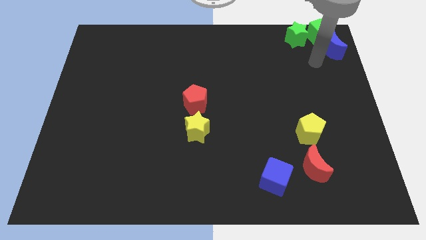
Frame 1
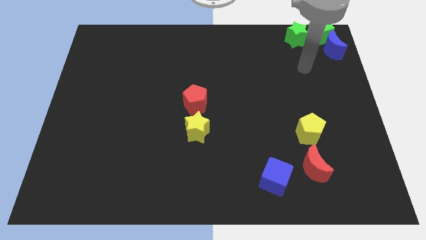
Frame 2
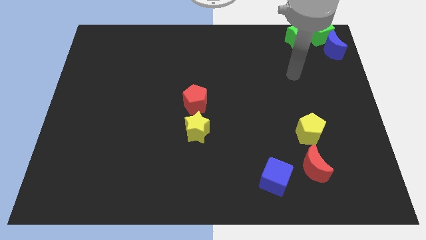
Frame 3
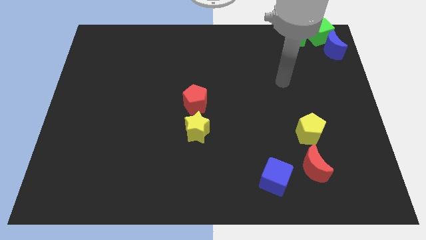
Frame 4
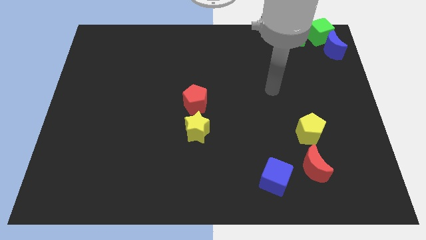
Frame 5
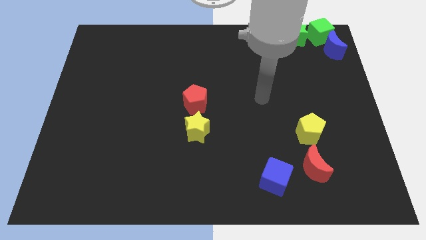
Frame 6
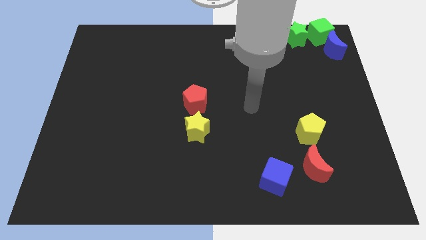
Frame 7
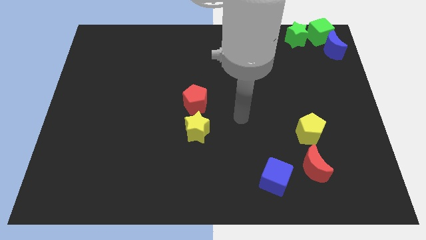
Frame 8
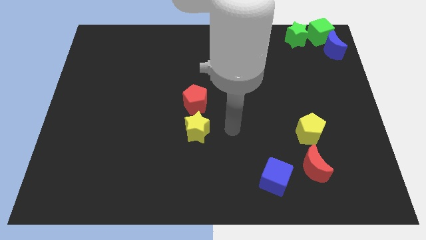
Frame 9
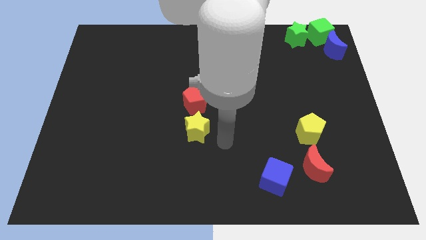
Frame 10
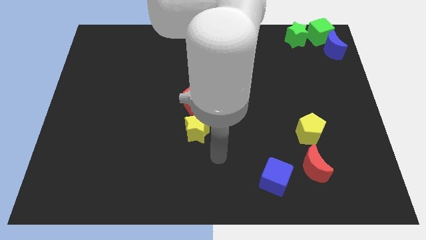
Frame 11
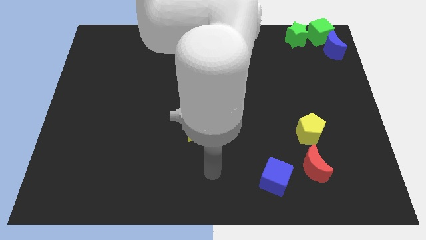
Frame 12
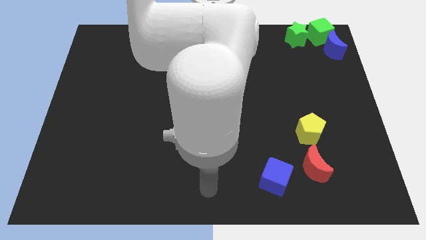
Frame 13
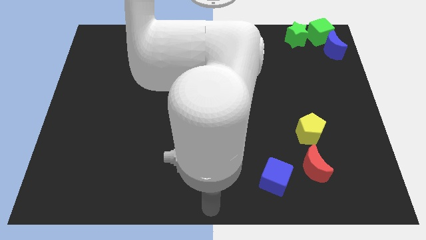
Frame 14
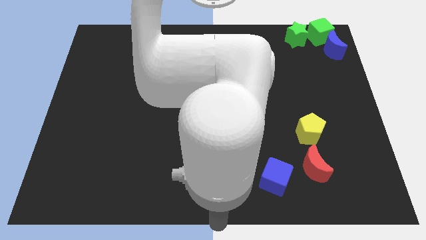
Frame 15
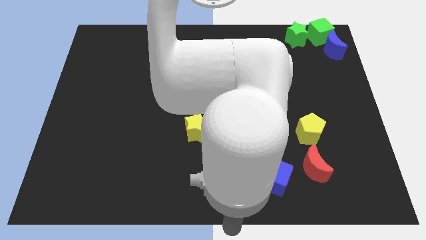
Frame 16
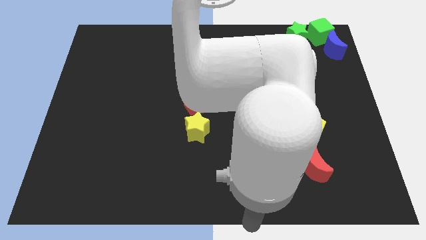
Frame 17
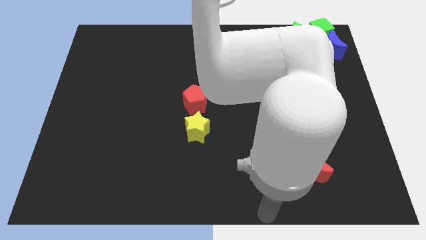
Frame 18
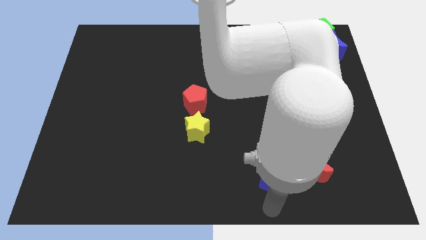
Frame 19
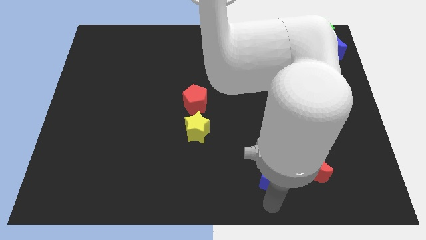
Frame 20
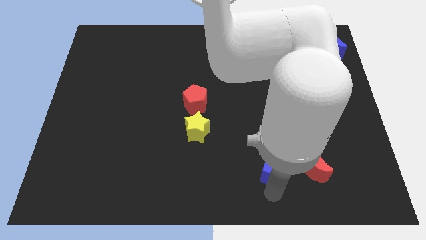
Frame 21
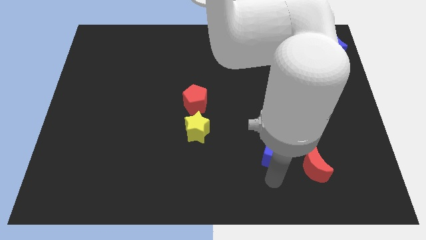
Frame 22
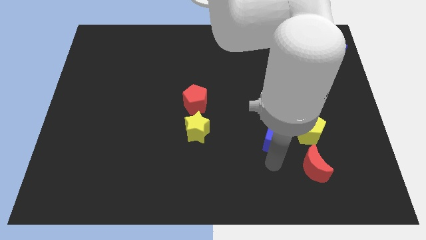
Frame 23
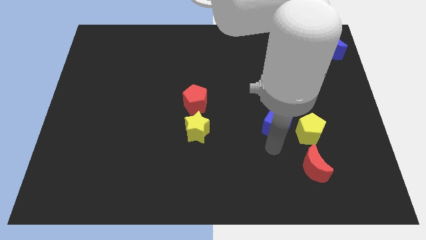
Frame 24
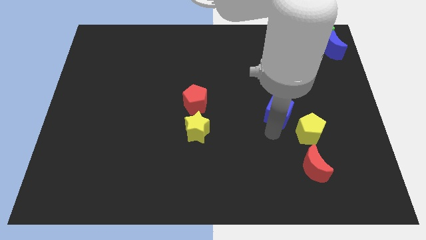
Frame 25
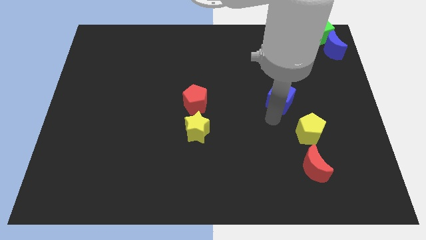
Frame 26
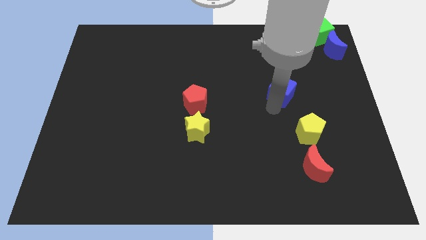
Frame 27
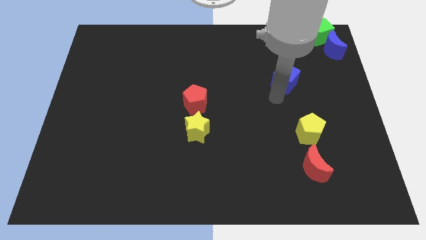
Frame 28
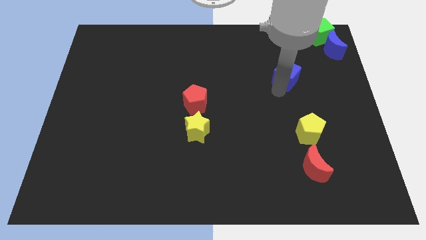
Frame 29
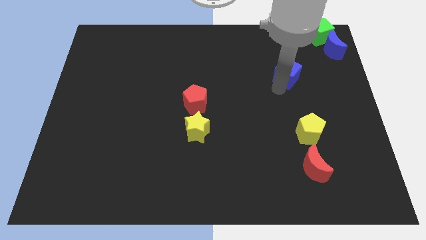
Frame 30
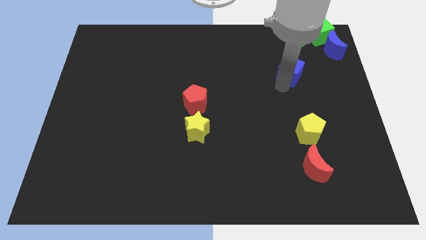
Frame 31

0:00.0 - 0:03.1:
move the blue cube slightly upwards

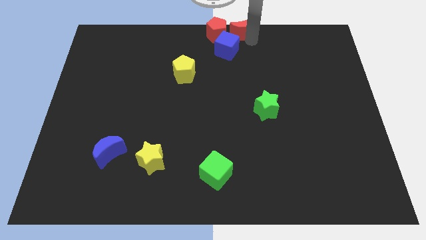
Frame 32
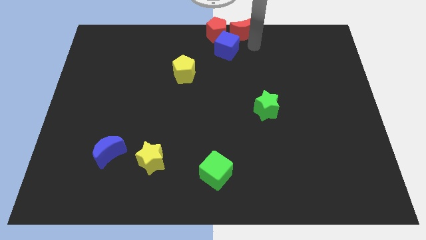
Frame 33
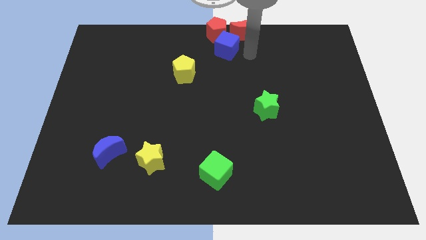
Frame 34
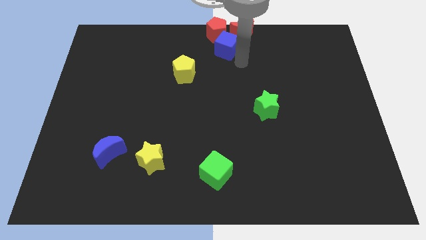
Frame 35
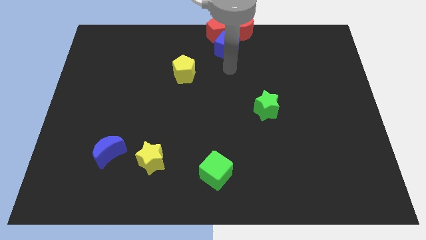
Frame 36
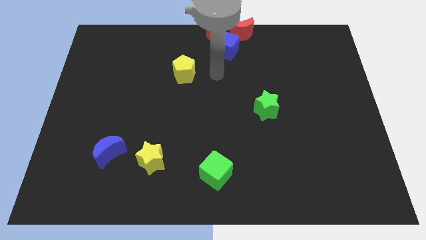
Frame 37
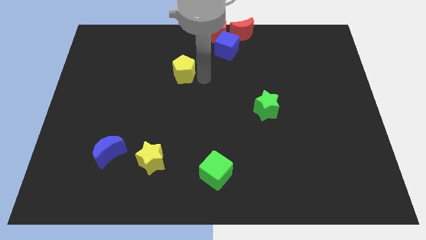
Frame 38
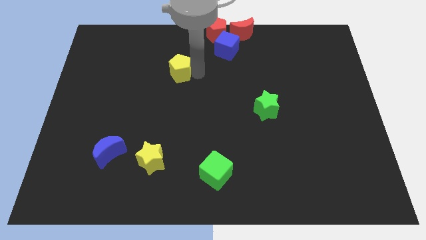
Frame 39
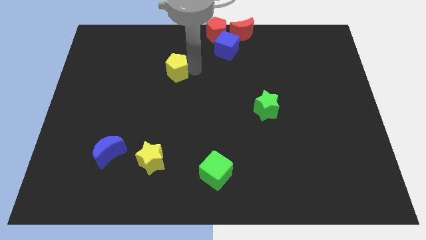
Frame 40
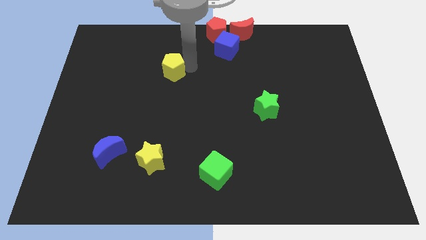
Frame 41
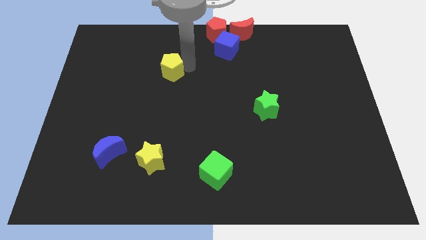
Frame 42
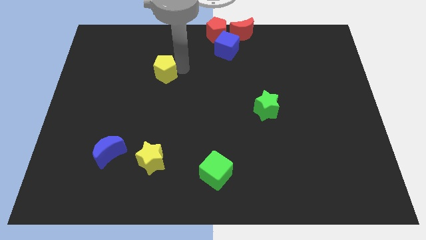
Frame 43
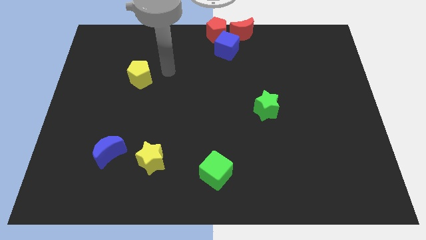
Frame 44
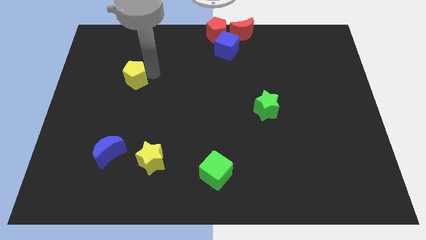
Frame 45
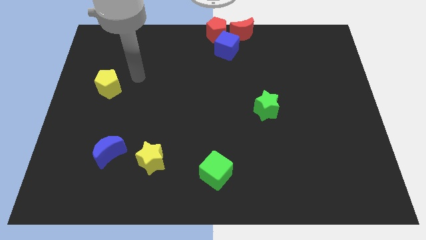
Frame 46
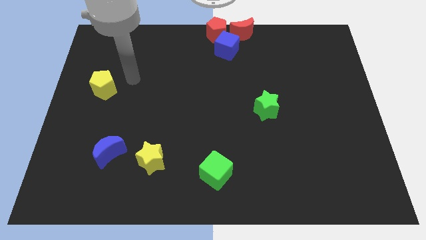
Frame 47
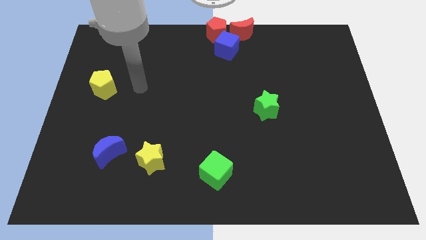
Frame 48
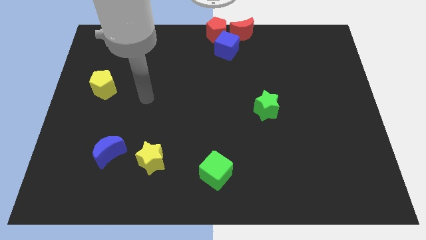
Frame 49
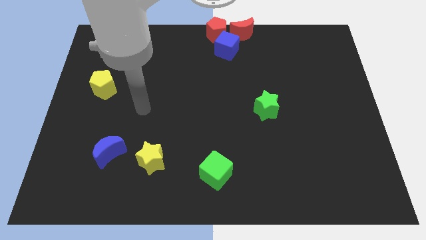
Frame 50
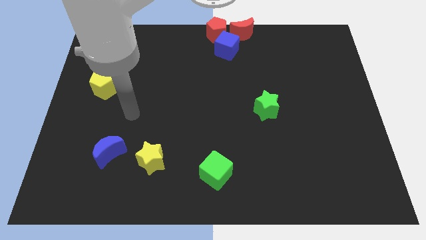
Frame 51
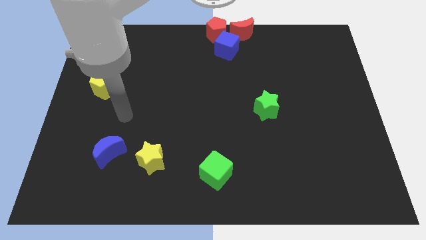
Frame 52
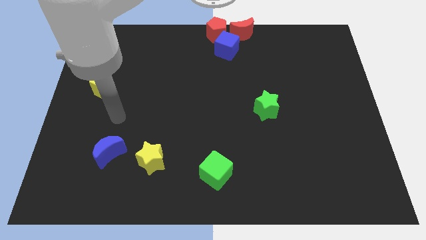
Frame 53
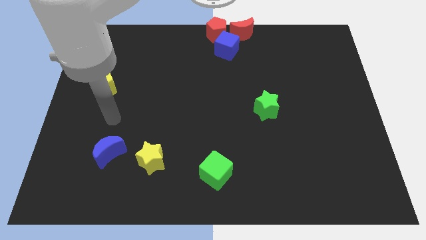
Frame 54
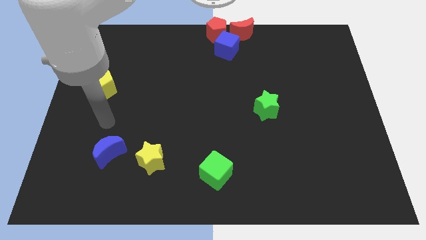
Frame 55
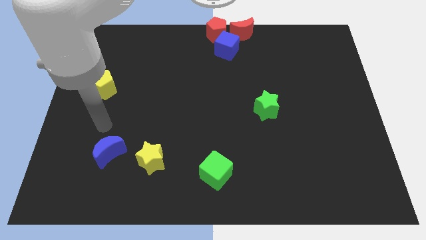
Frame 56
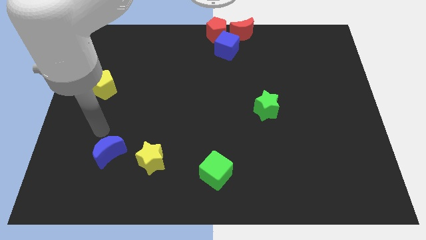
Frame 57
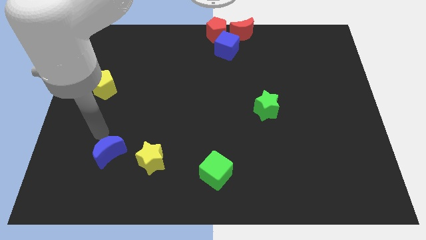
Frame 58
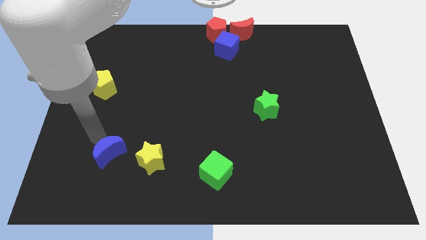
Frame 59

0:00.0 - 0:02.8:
move the yellow pentagon to the middle left

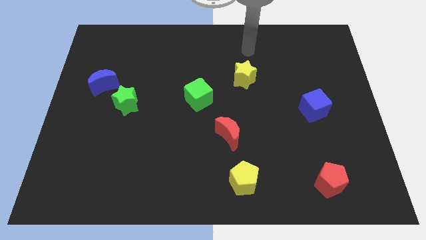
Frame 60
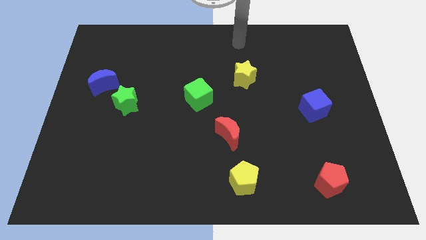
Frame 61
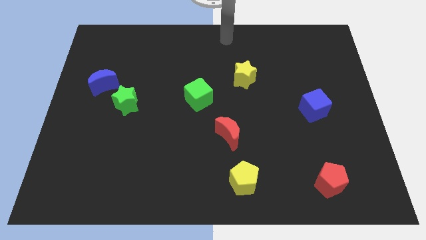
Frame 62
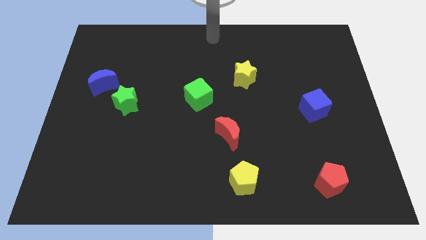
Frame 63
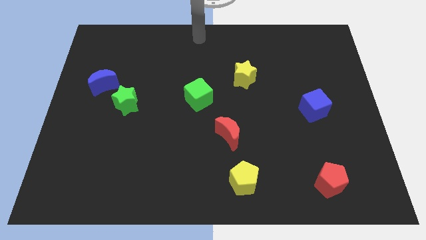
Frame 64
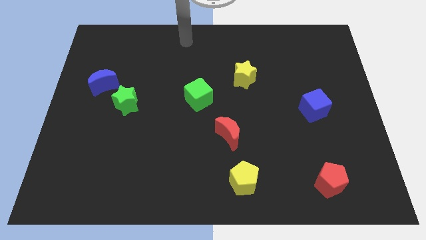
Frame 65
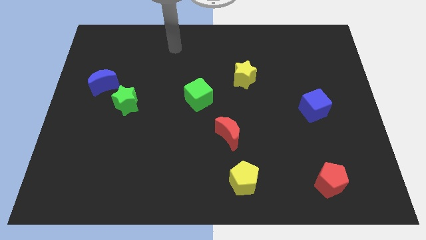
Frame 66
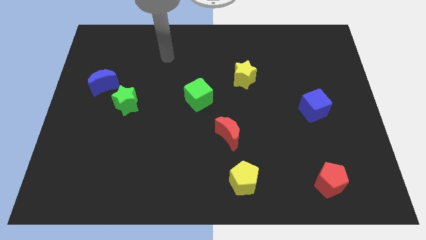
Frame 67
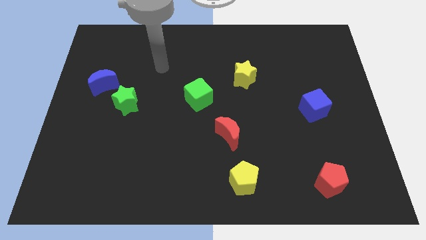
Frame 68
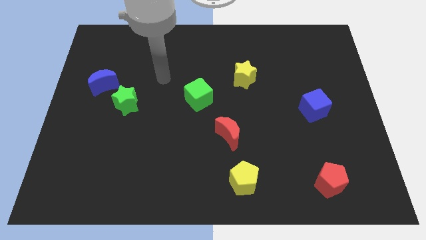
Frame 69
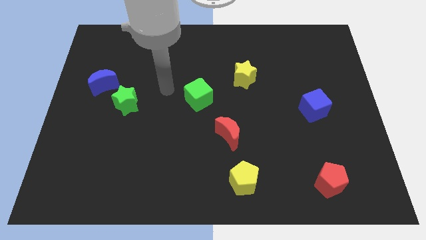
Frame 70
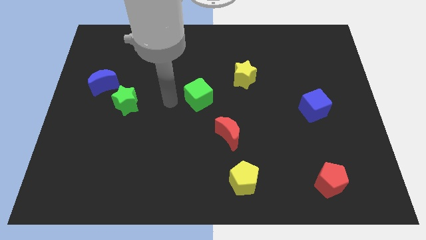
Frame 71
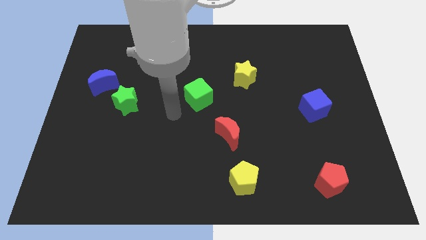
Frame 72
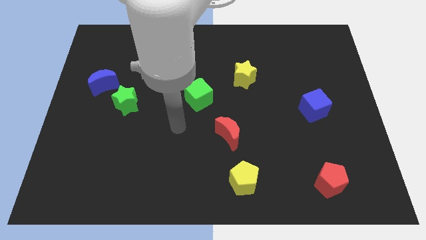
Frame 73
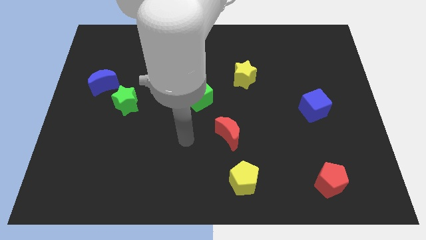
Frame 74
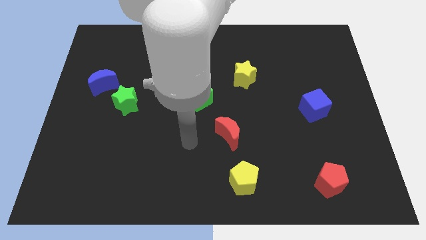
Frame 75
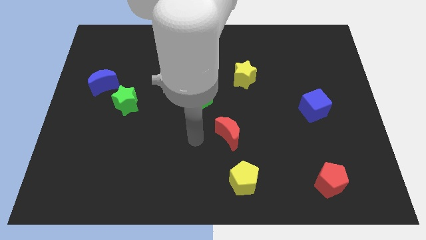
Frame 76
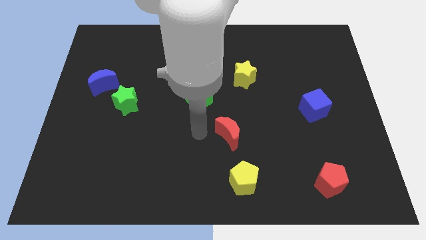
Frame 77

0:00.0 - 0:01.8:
move your arm away from the yellow star

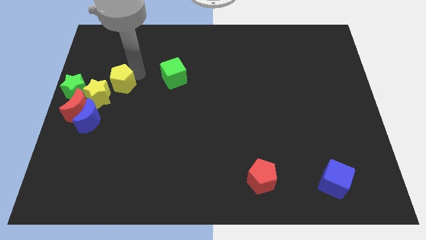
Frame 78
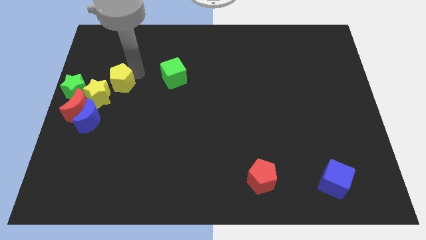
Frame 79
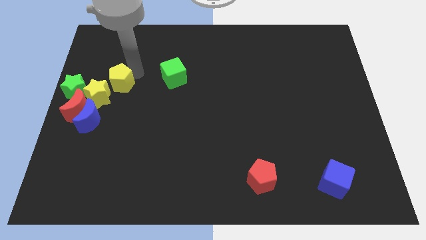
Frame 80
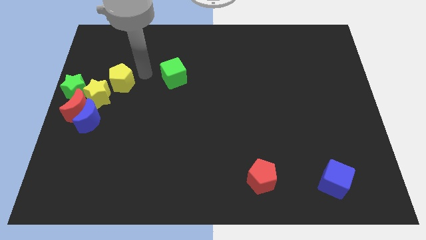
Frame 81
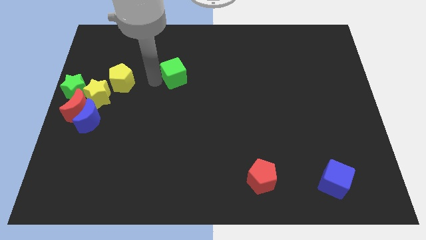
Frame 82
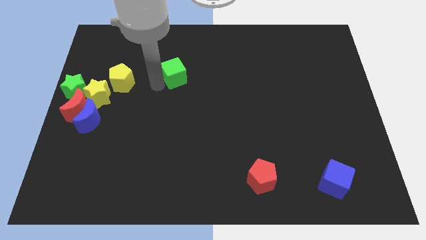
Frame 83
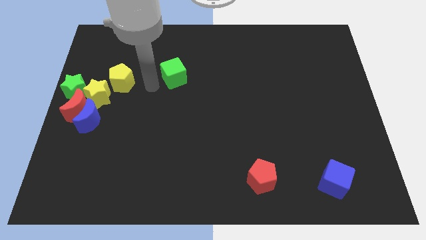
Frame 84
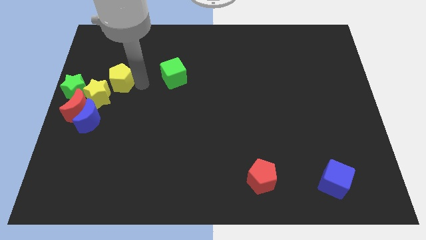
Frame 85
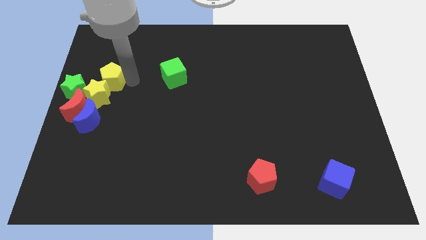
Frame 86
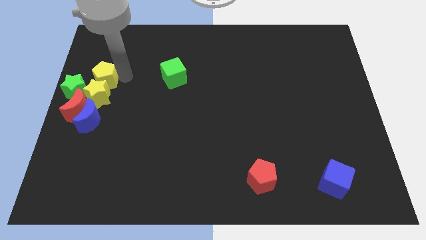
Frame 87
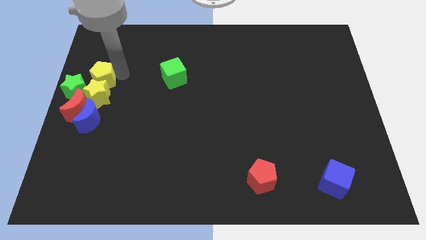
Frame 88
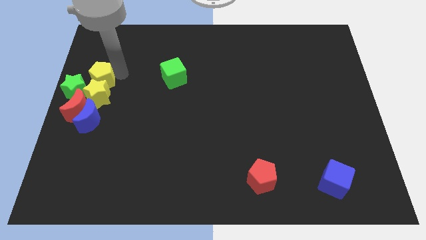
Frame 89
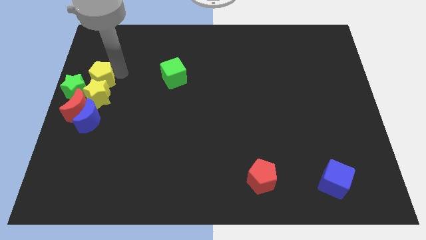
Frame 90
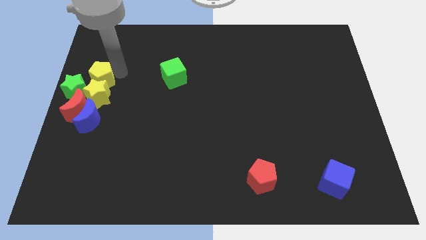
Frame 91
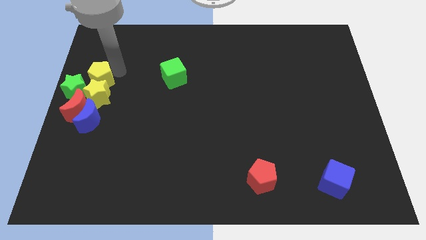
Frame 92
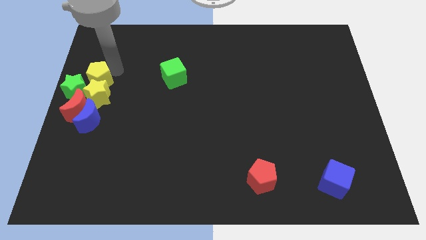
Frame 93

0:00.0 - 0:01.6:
place the yellow pentagon above the yellow star
